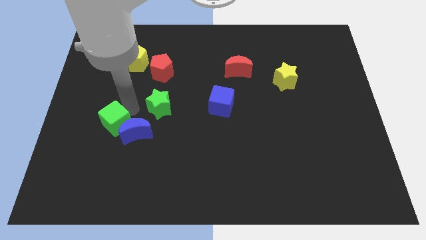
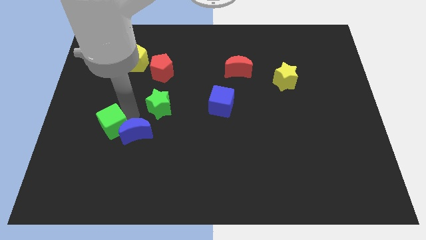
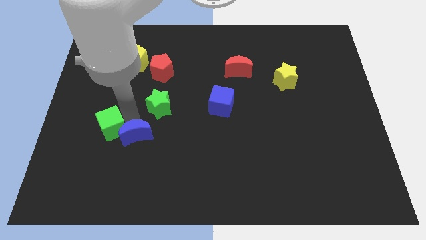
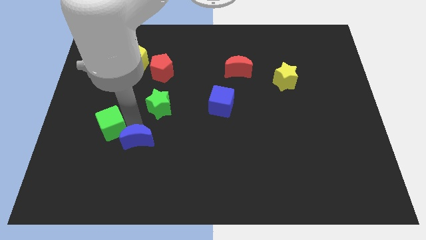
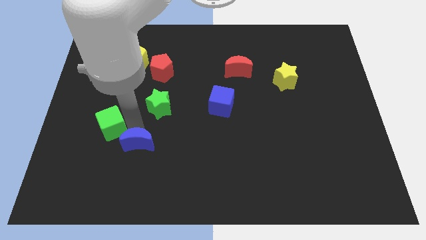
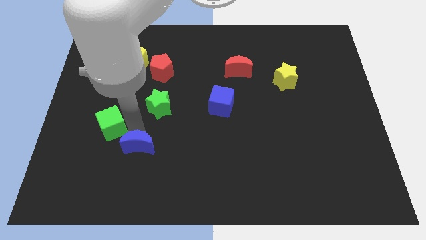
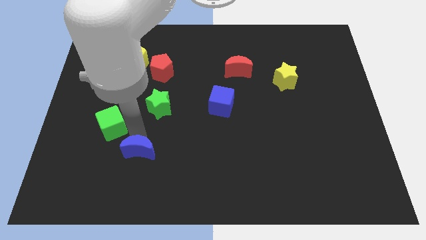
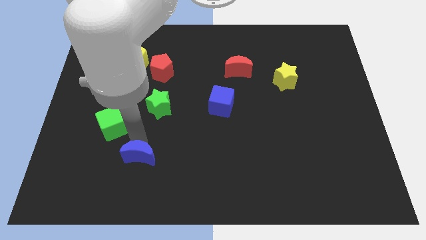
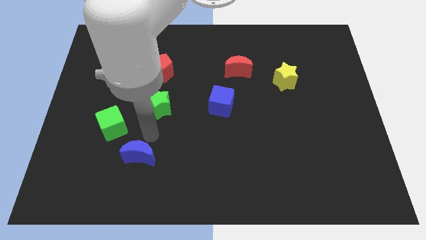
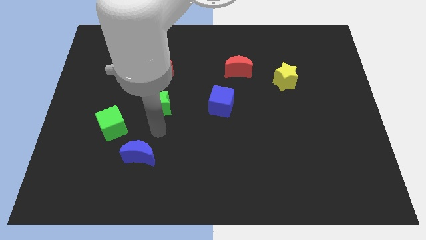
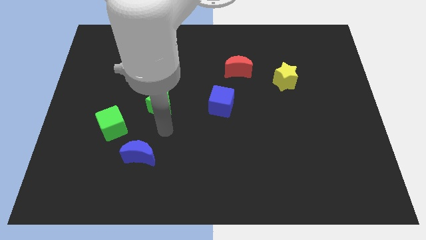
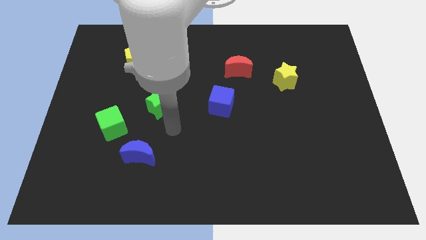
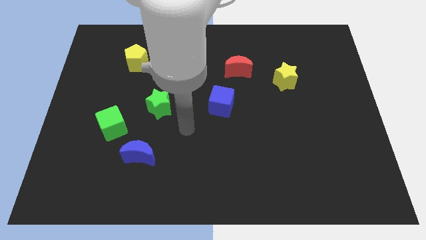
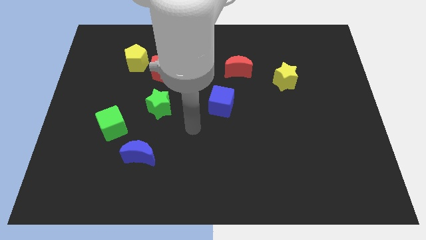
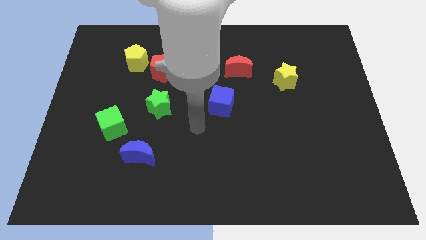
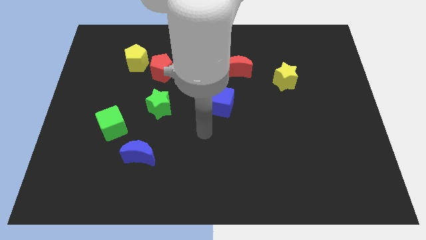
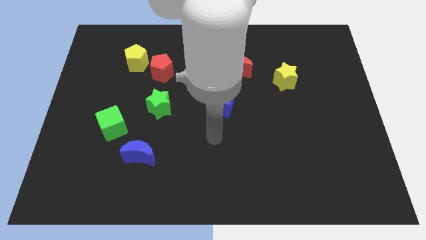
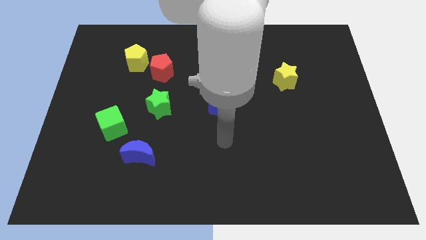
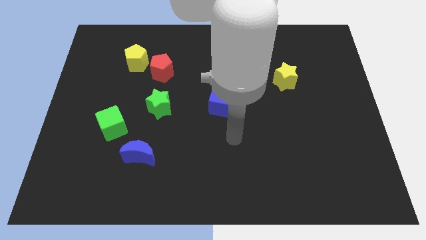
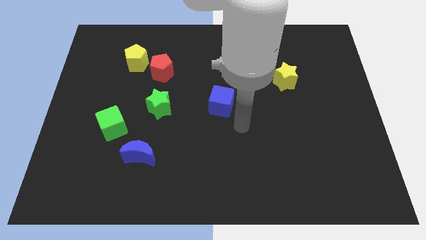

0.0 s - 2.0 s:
push the blue moon towards to the bottom left

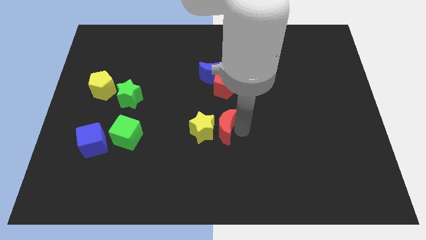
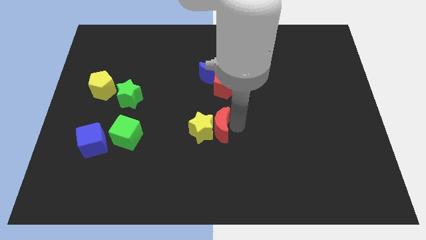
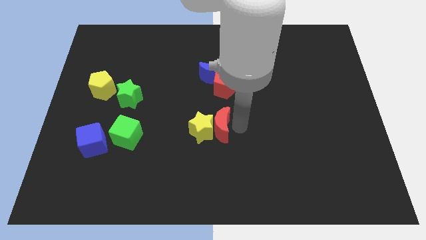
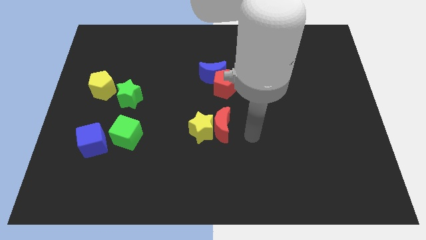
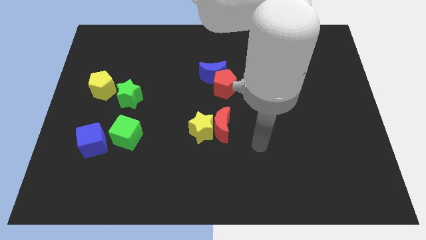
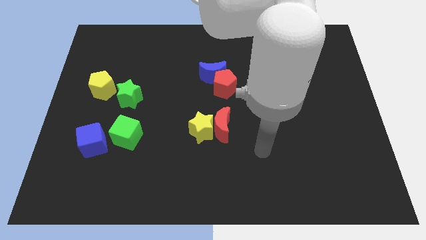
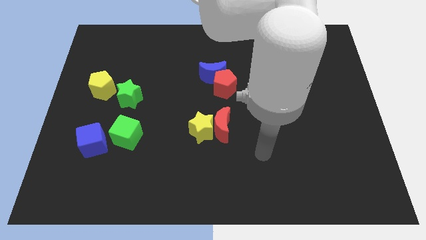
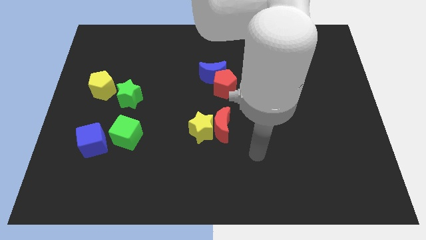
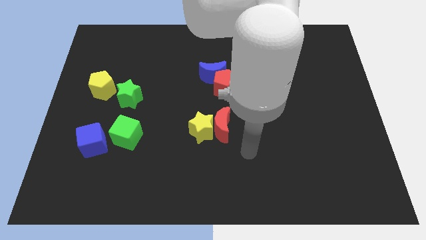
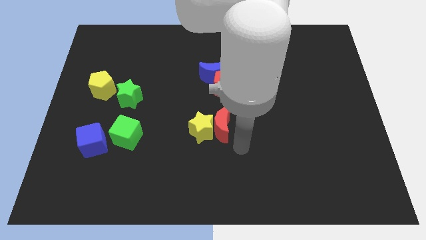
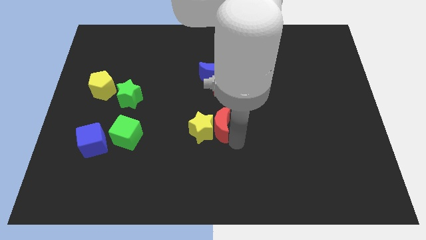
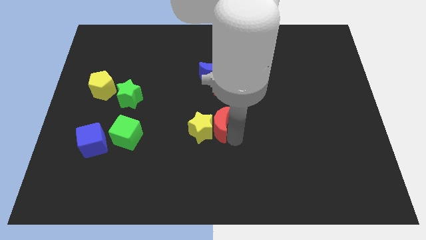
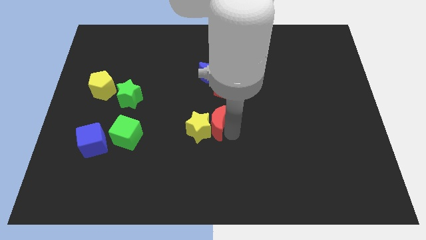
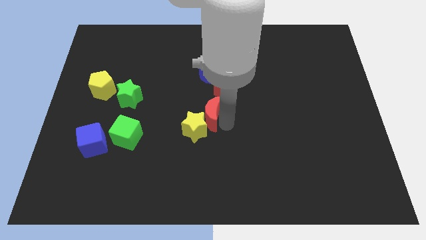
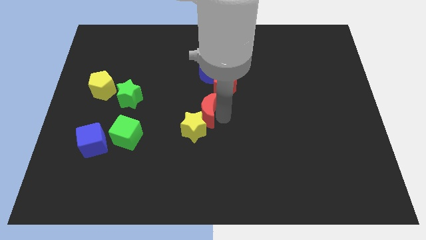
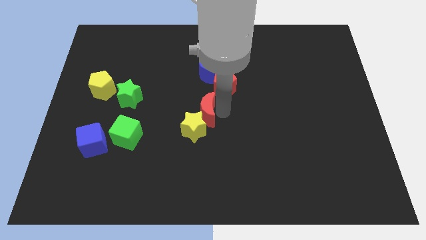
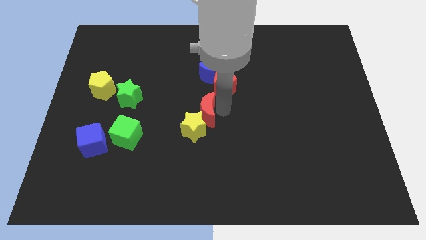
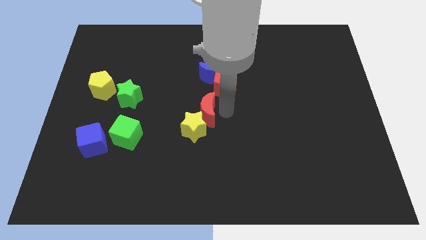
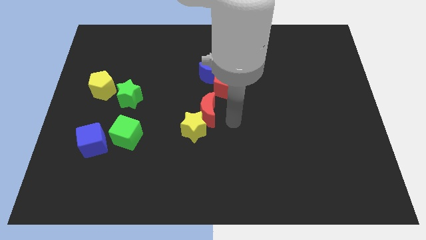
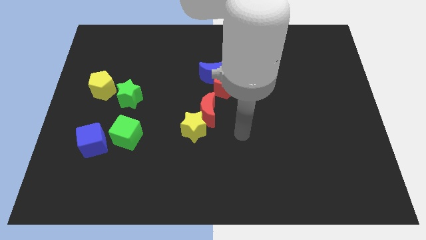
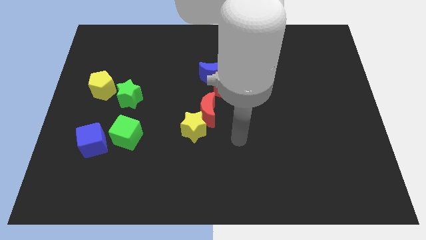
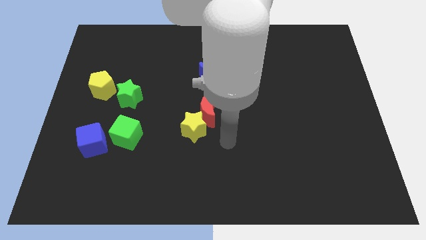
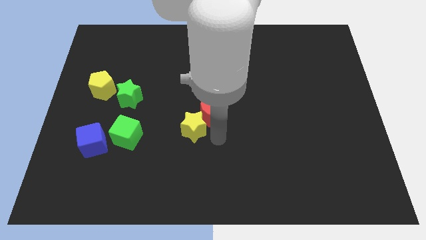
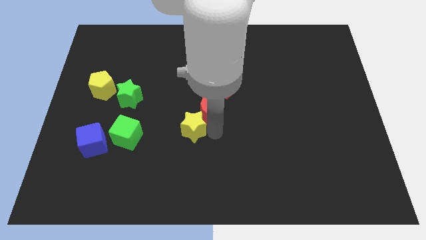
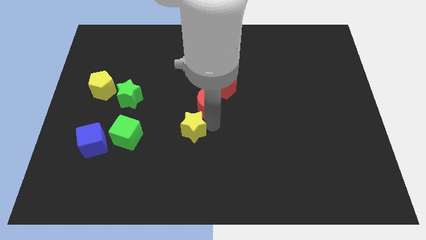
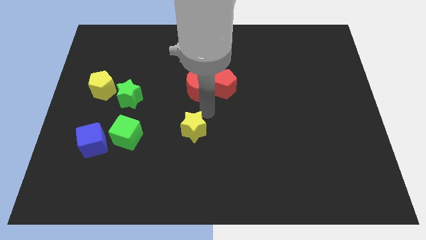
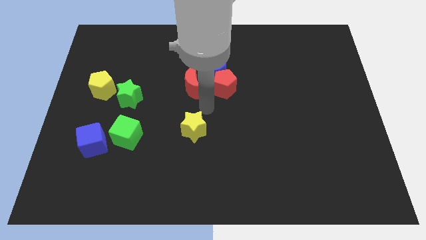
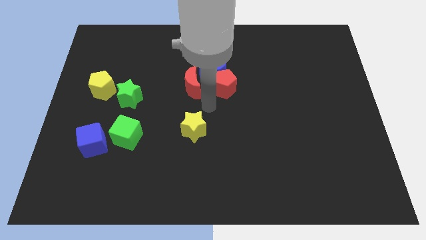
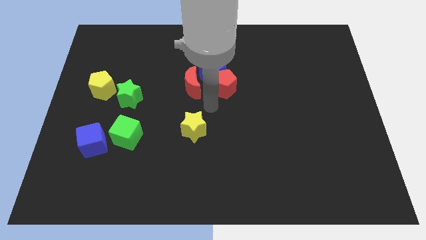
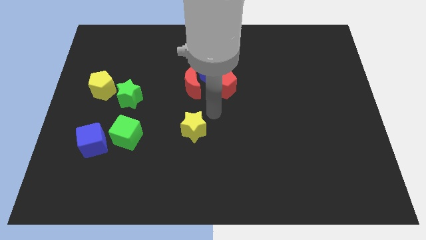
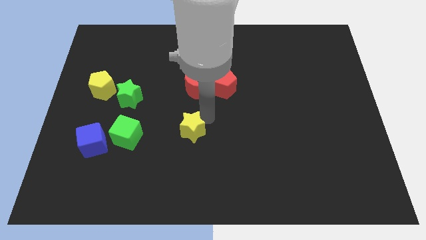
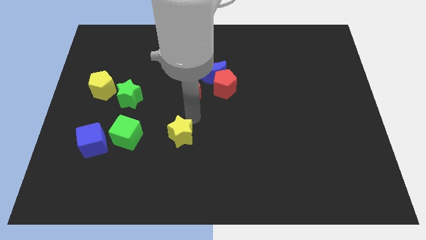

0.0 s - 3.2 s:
move the red crescent to the left of the blue crescent

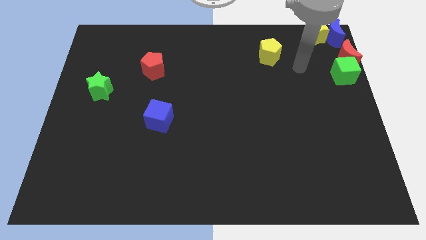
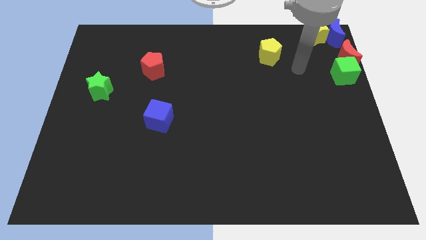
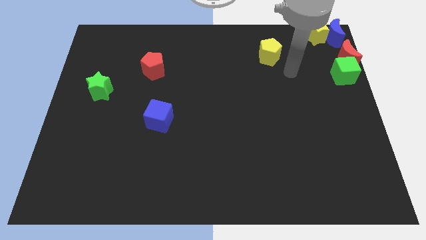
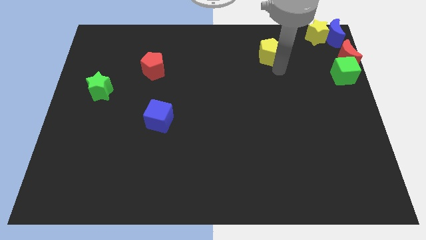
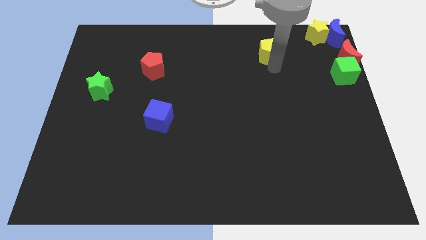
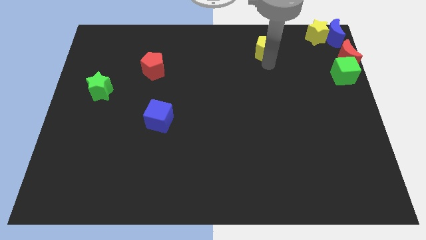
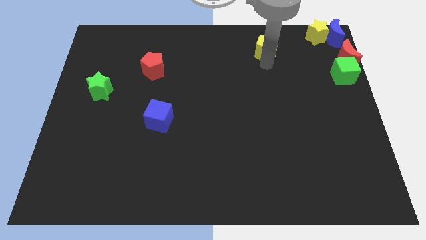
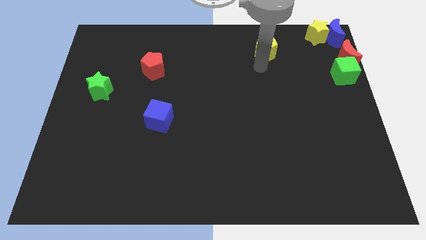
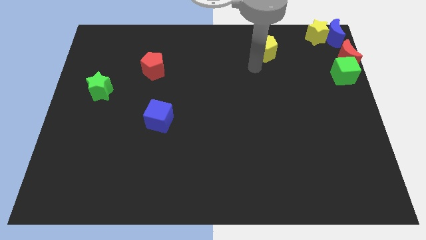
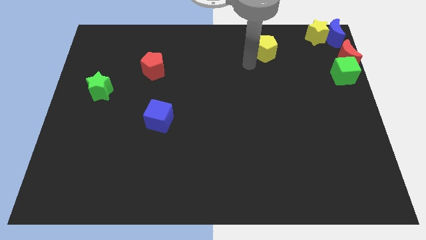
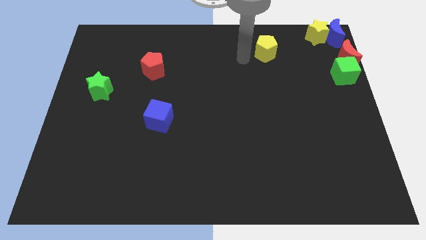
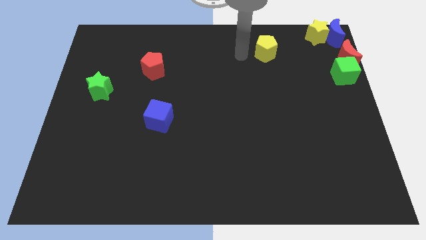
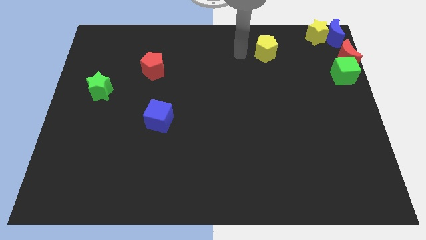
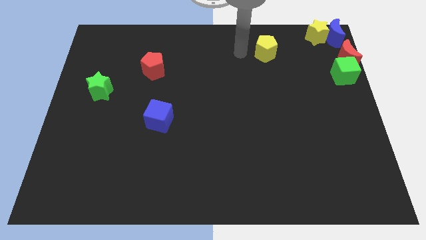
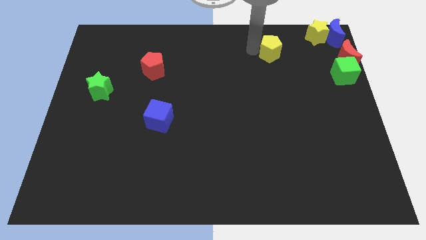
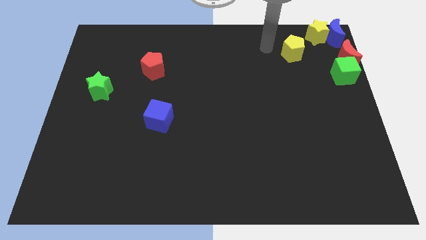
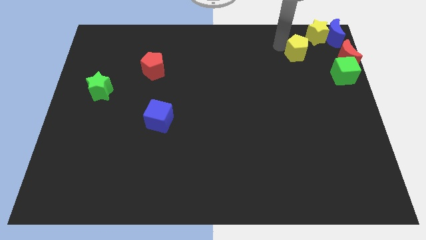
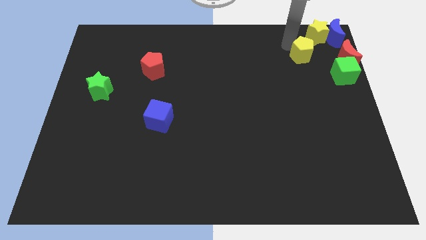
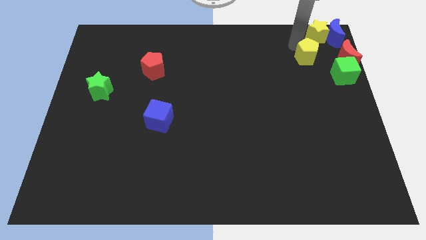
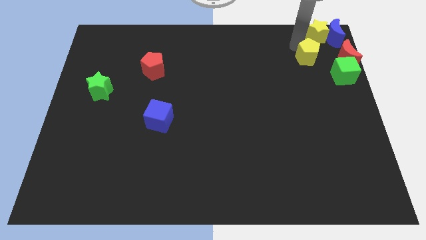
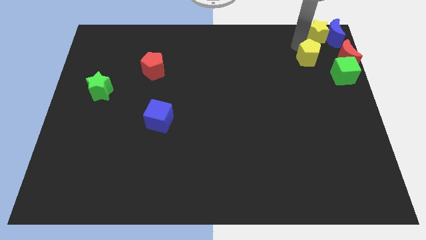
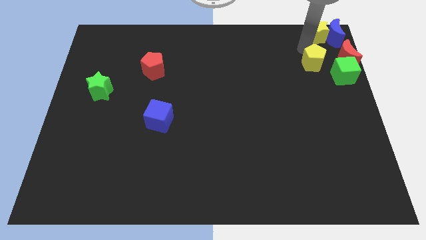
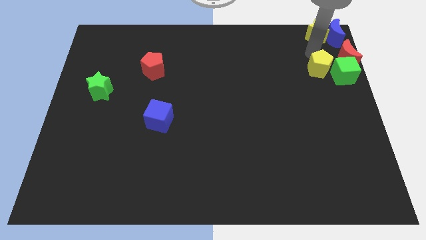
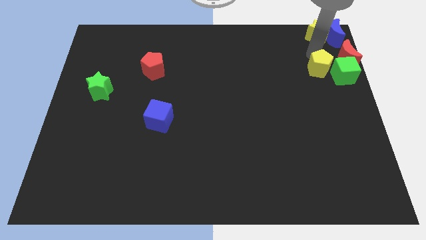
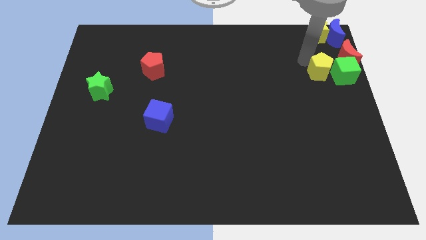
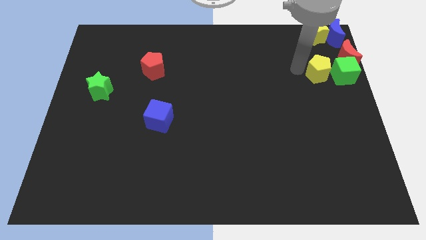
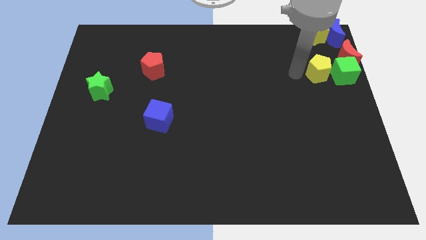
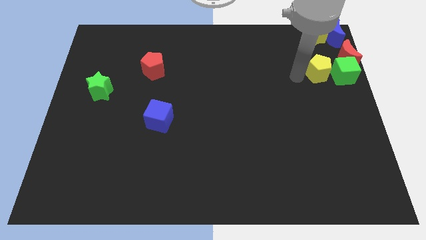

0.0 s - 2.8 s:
place the yellow pentagon to the left of the green cube

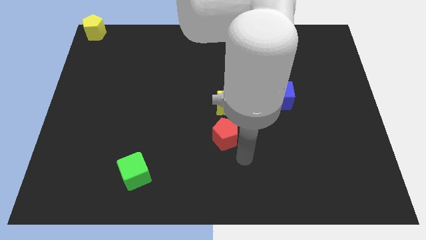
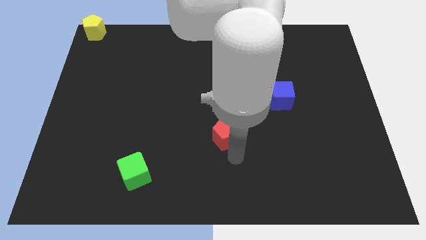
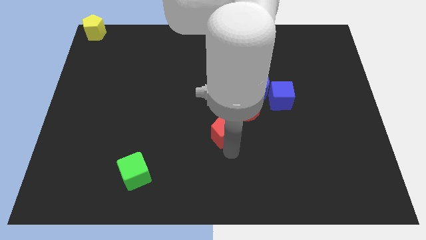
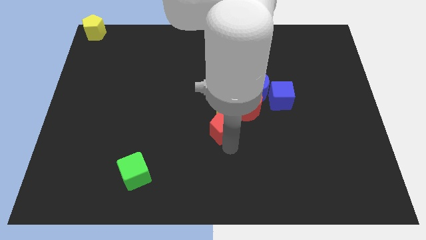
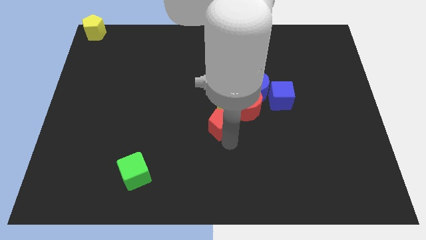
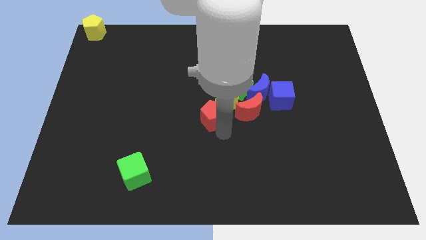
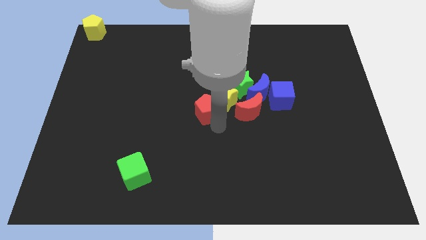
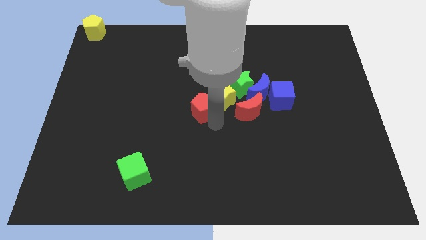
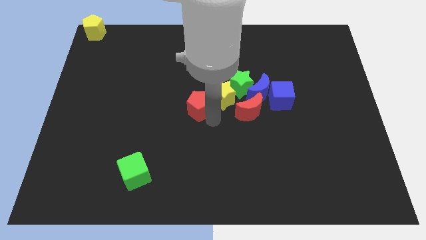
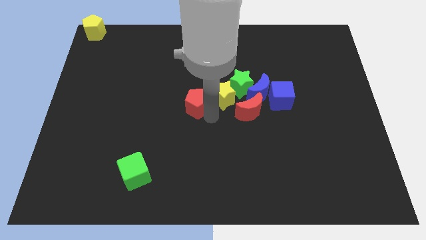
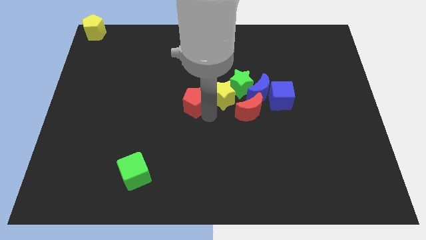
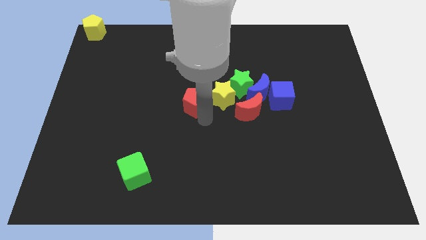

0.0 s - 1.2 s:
move the red pentagon to the center of the board
